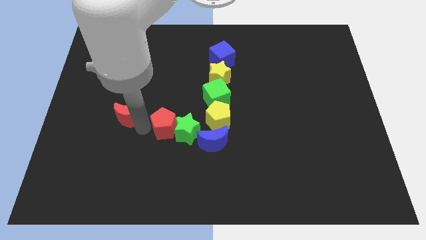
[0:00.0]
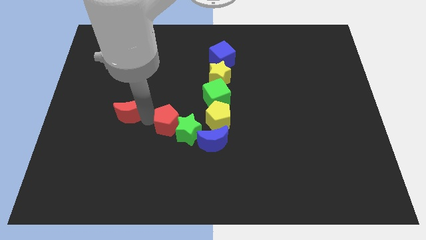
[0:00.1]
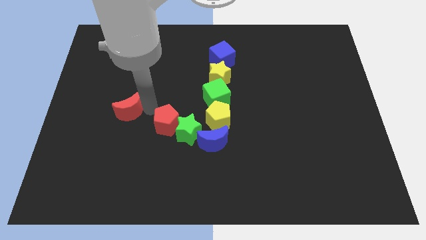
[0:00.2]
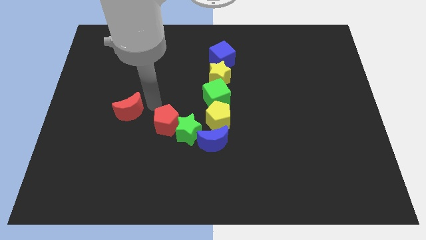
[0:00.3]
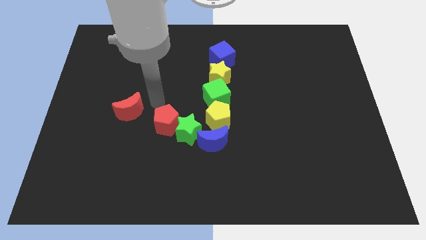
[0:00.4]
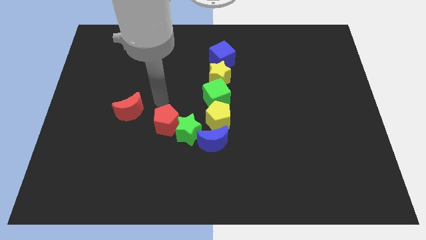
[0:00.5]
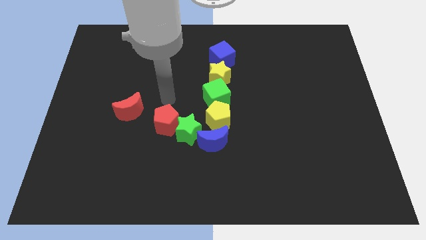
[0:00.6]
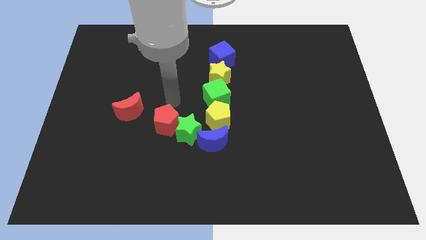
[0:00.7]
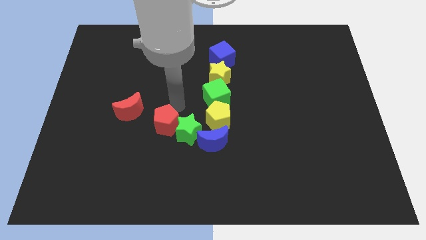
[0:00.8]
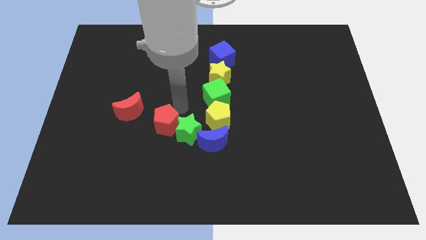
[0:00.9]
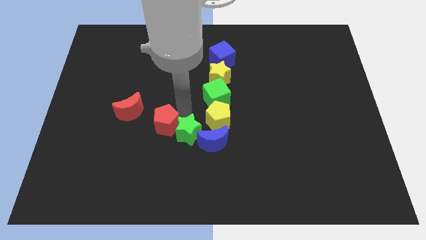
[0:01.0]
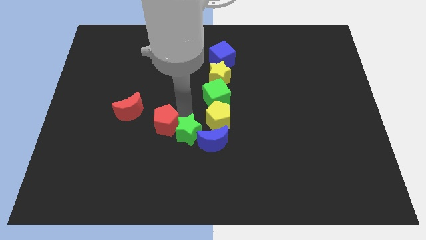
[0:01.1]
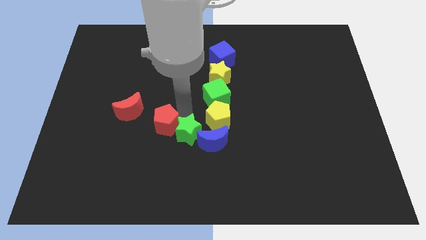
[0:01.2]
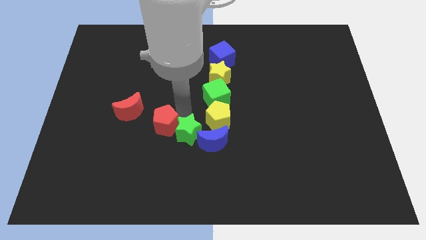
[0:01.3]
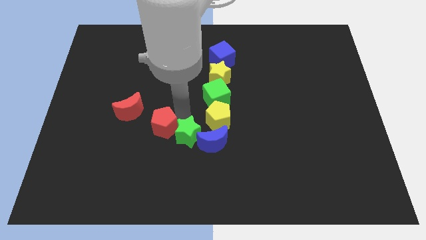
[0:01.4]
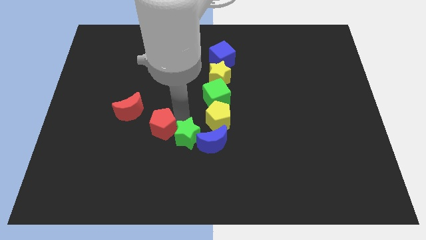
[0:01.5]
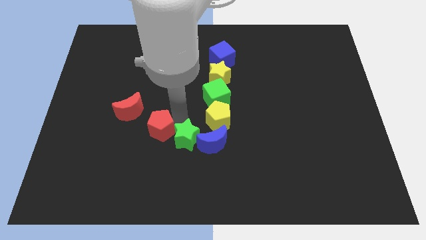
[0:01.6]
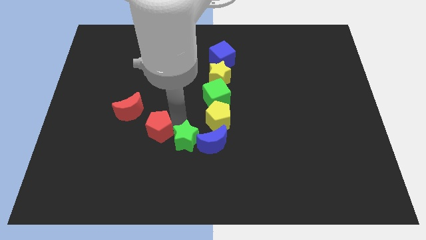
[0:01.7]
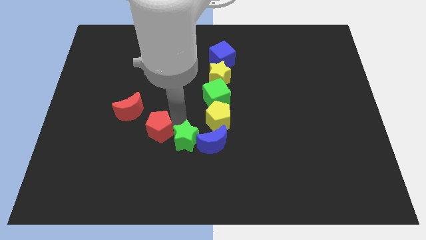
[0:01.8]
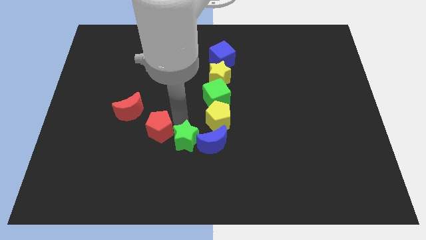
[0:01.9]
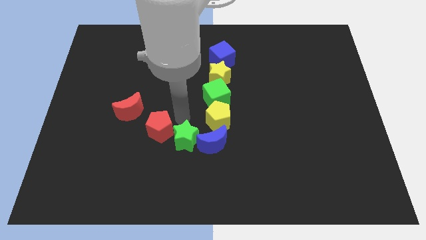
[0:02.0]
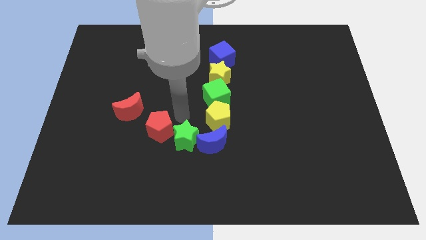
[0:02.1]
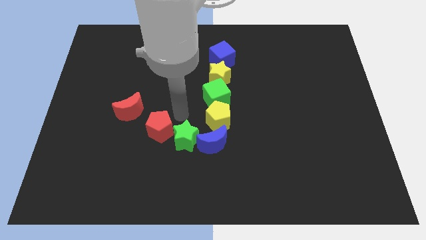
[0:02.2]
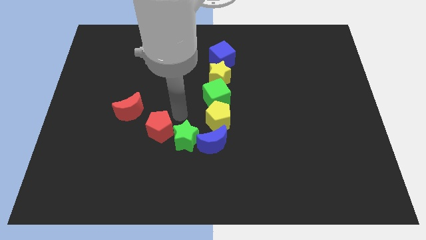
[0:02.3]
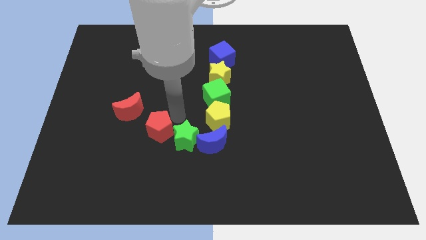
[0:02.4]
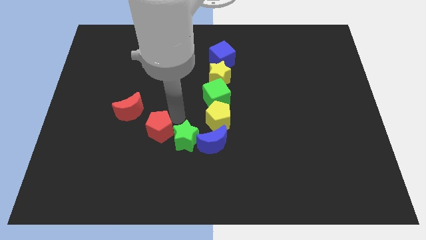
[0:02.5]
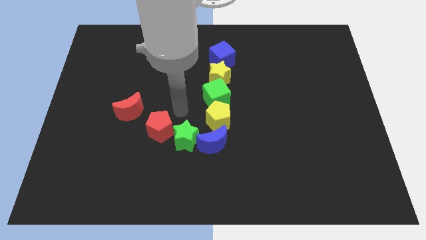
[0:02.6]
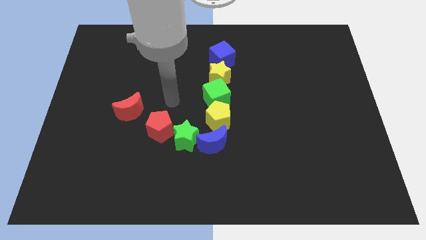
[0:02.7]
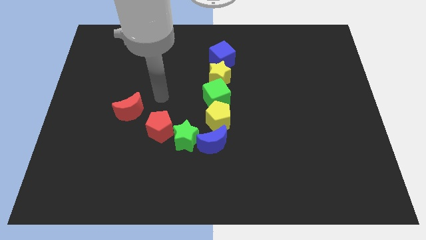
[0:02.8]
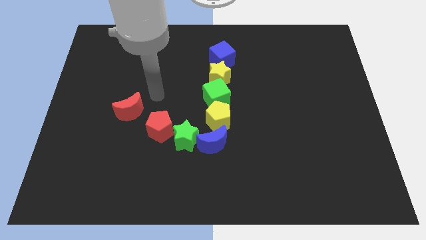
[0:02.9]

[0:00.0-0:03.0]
slightly push the green star and red pentagon

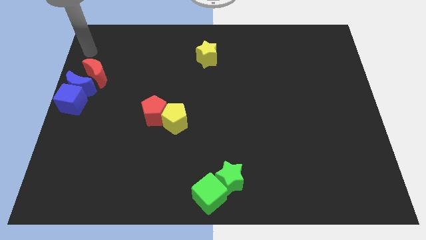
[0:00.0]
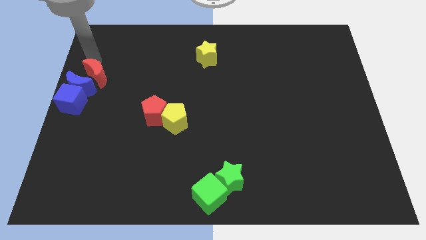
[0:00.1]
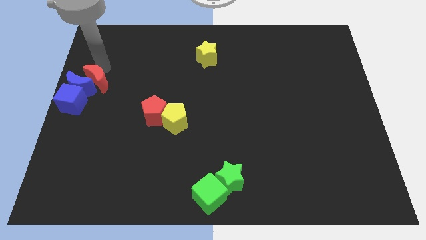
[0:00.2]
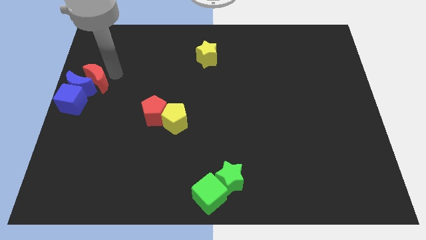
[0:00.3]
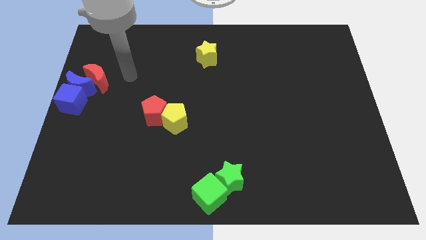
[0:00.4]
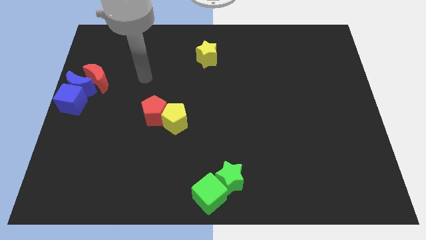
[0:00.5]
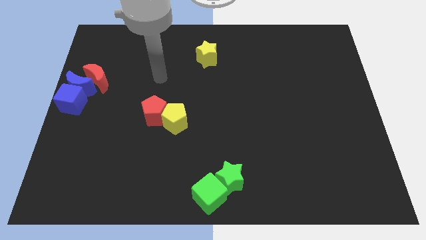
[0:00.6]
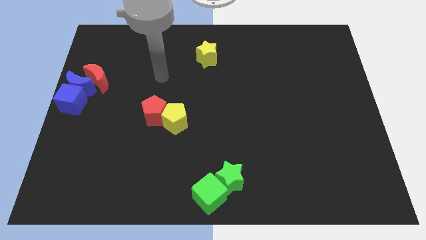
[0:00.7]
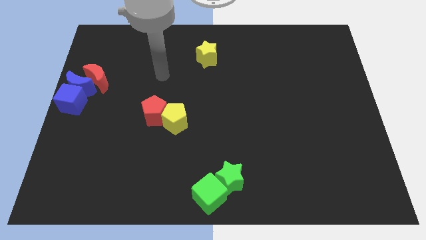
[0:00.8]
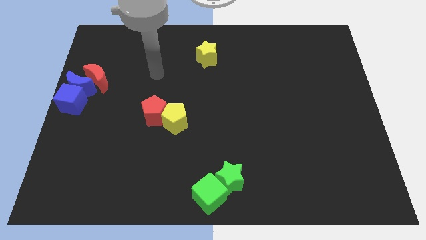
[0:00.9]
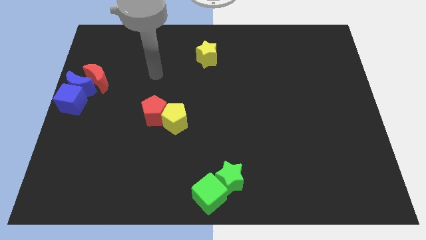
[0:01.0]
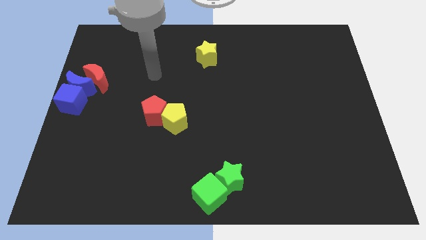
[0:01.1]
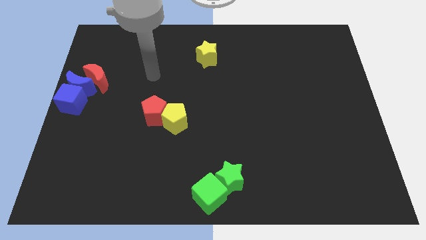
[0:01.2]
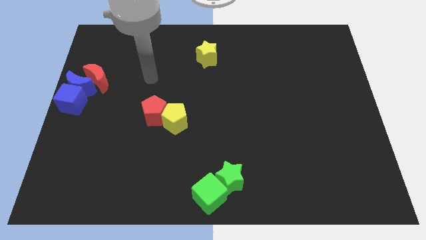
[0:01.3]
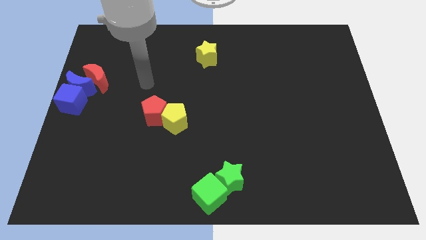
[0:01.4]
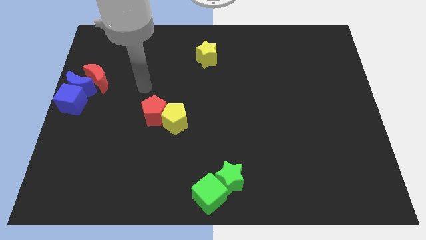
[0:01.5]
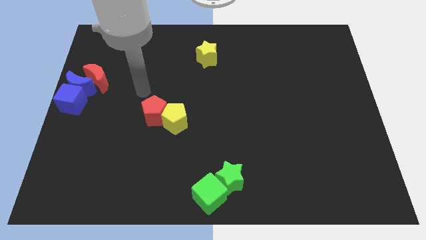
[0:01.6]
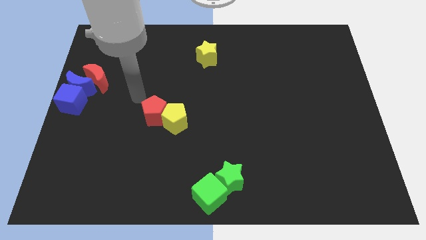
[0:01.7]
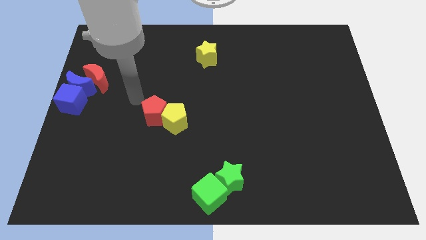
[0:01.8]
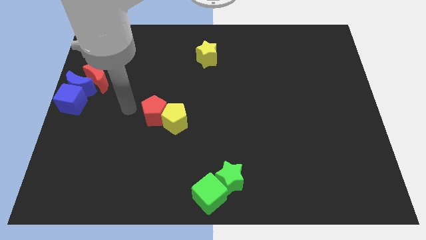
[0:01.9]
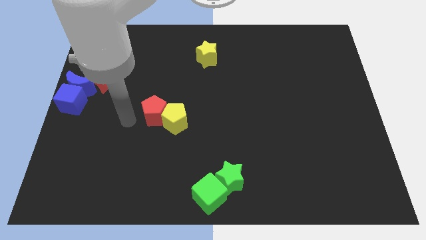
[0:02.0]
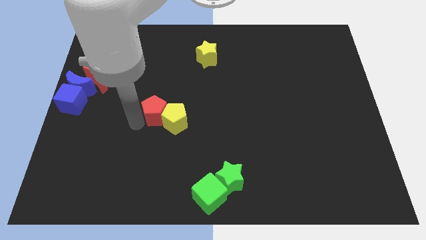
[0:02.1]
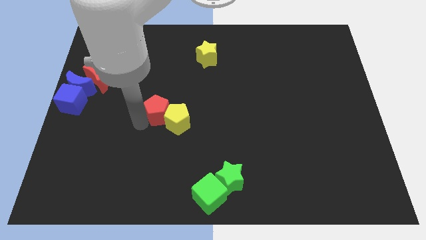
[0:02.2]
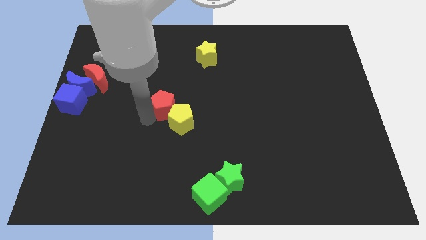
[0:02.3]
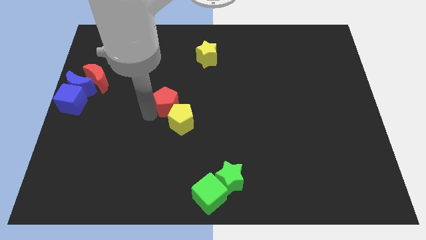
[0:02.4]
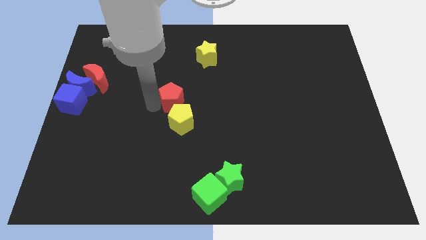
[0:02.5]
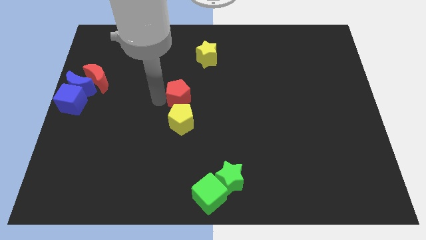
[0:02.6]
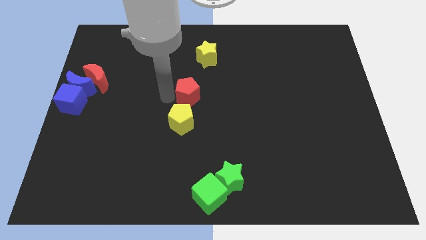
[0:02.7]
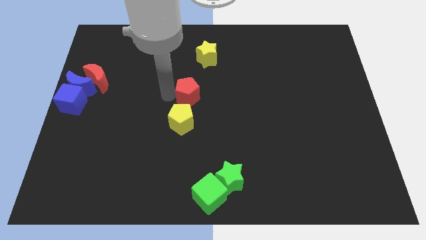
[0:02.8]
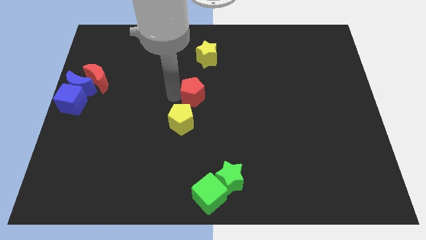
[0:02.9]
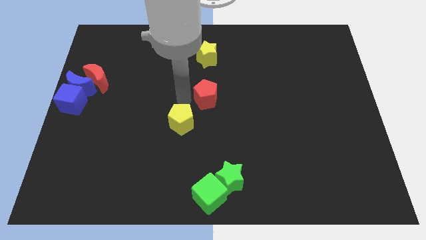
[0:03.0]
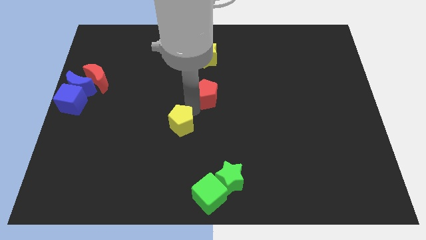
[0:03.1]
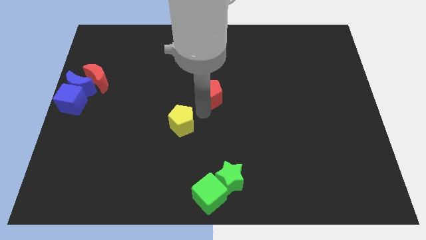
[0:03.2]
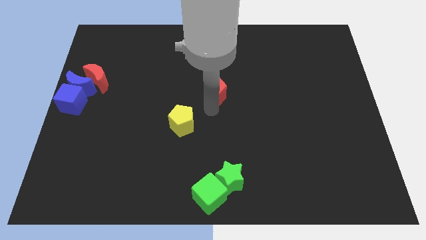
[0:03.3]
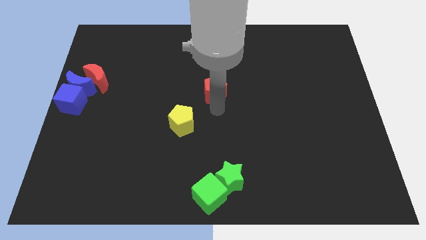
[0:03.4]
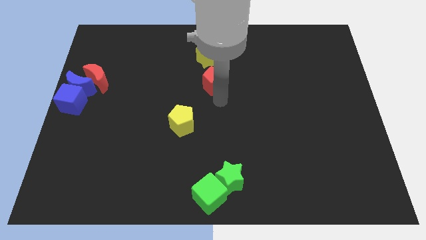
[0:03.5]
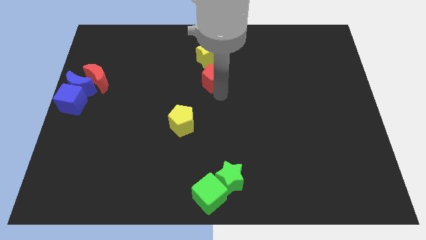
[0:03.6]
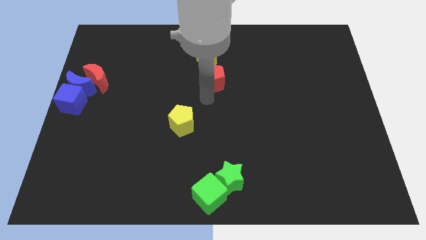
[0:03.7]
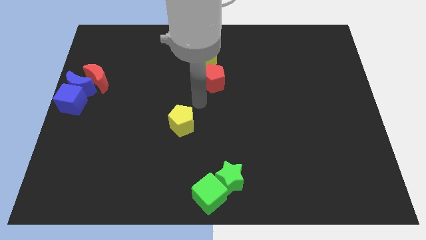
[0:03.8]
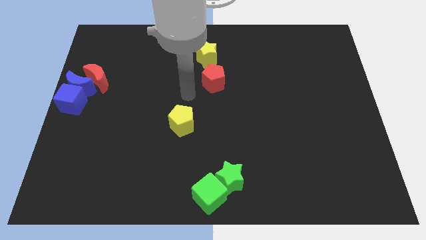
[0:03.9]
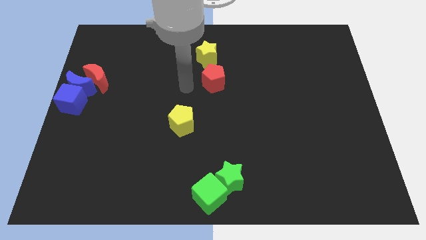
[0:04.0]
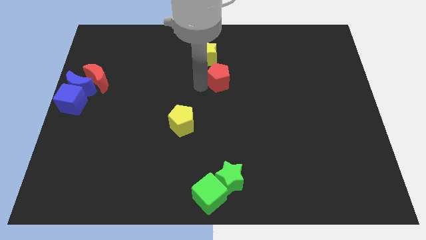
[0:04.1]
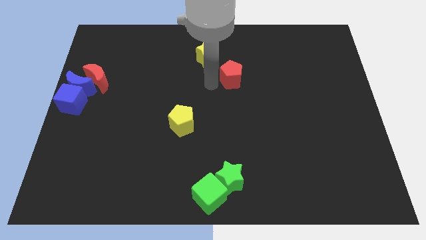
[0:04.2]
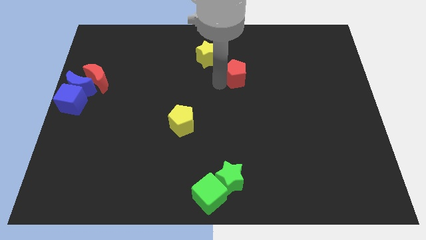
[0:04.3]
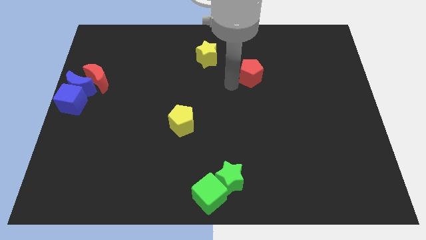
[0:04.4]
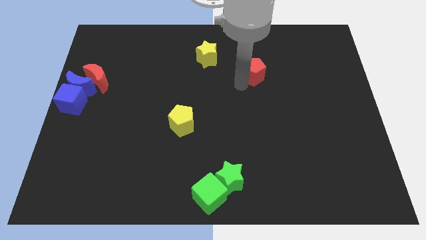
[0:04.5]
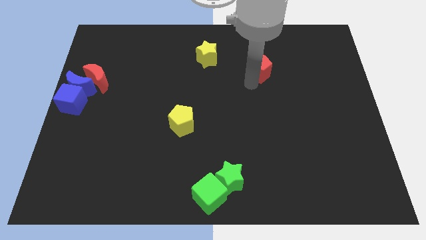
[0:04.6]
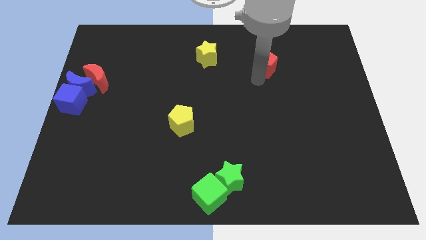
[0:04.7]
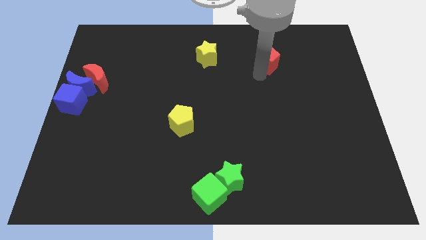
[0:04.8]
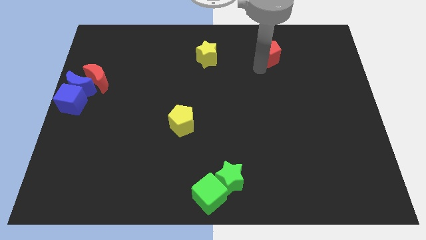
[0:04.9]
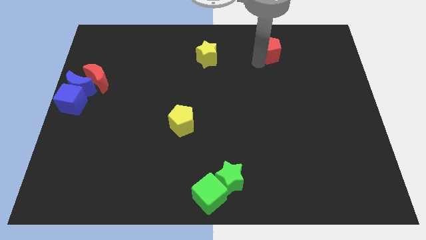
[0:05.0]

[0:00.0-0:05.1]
push the red pentagon horizontally to the right side of the yellow star

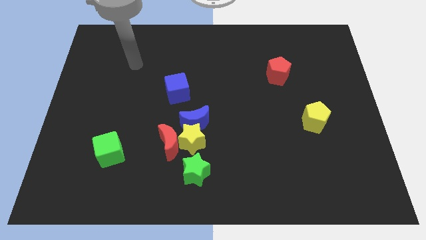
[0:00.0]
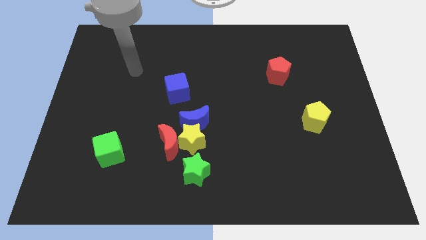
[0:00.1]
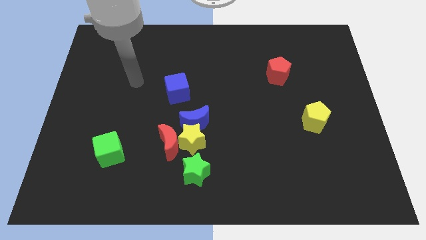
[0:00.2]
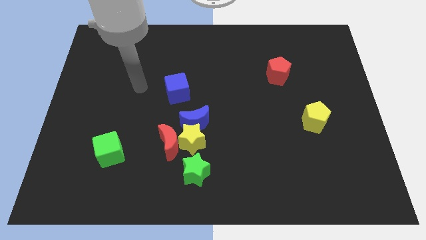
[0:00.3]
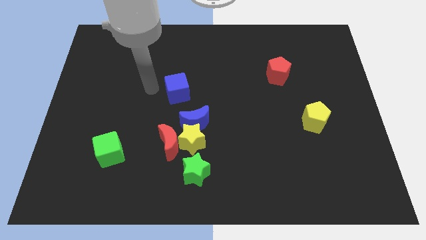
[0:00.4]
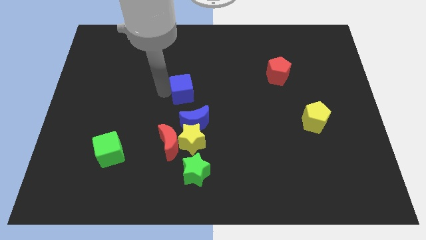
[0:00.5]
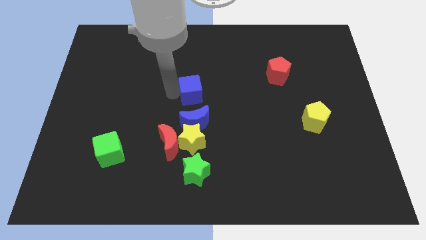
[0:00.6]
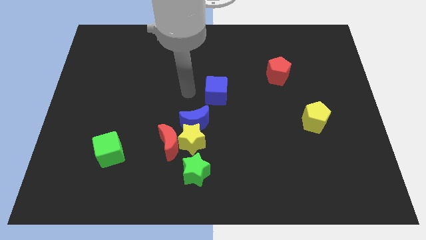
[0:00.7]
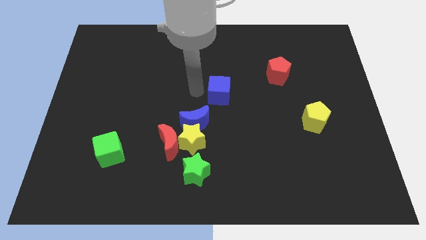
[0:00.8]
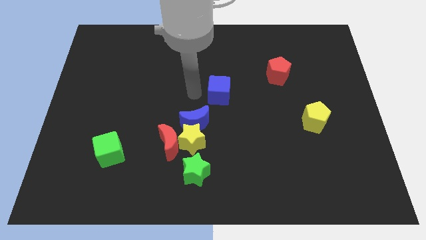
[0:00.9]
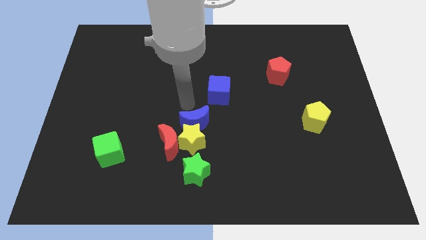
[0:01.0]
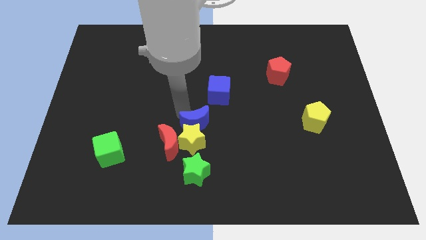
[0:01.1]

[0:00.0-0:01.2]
slightly push the blue cube towards the right
